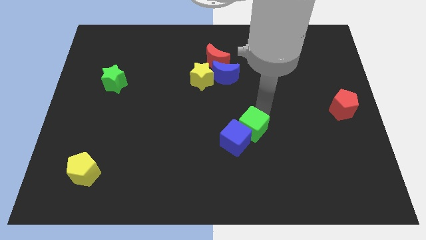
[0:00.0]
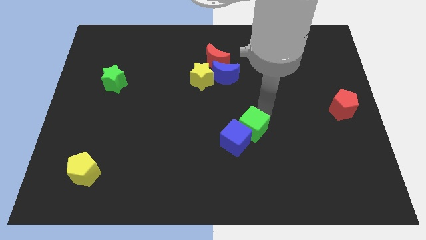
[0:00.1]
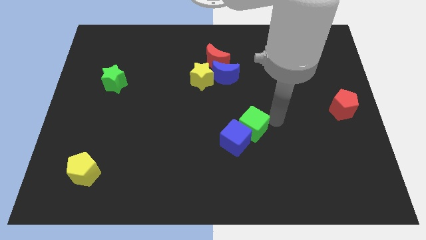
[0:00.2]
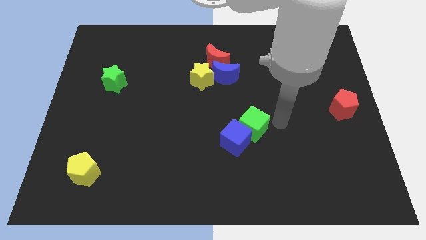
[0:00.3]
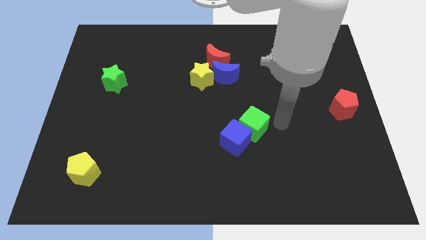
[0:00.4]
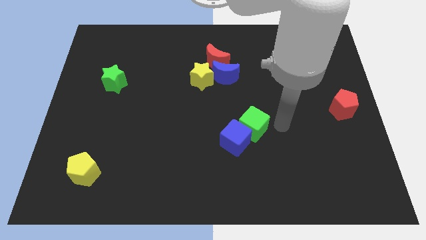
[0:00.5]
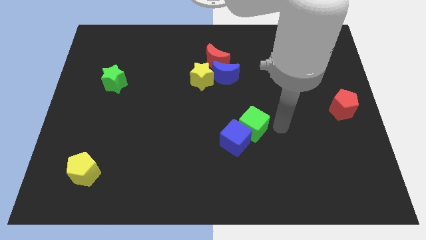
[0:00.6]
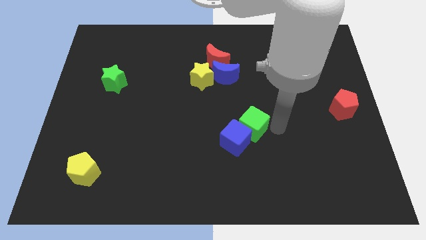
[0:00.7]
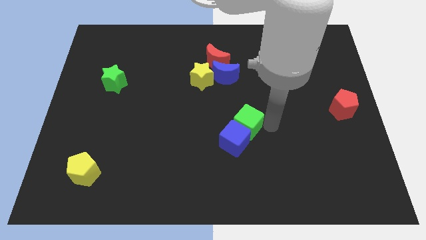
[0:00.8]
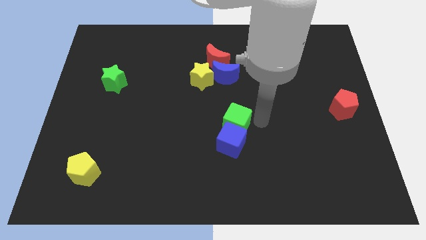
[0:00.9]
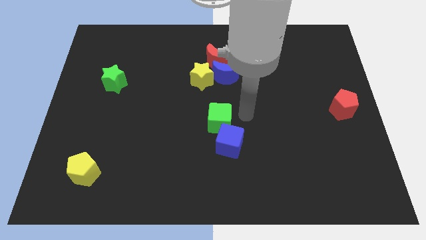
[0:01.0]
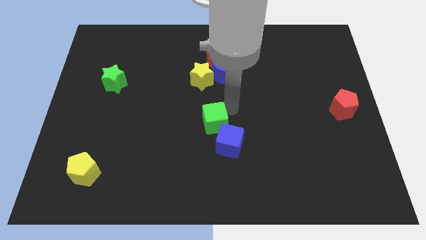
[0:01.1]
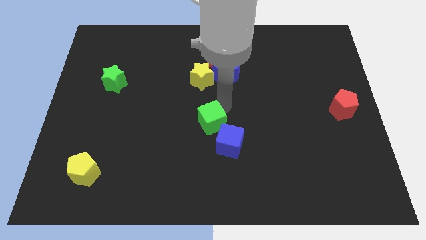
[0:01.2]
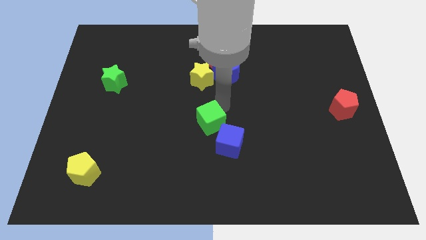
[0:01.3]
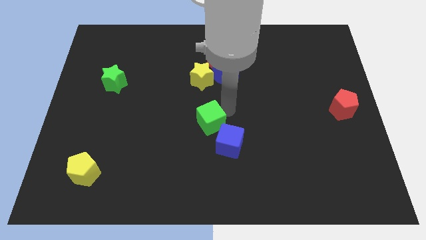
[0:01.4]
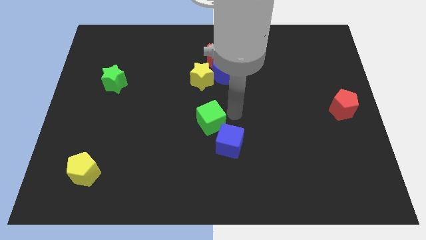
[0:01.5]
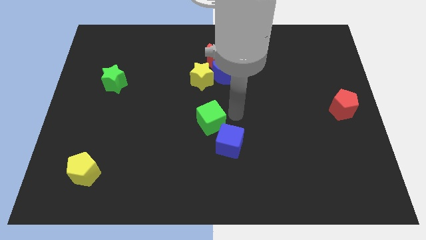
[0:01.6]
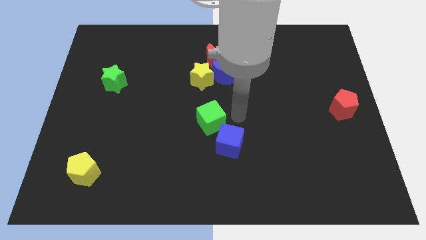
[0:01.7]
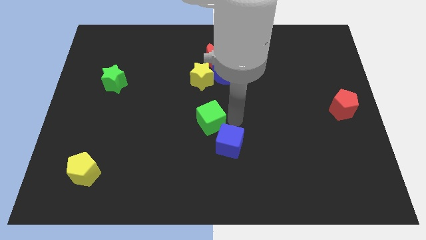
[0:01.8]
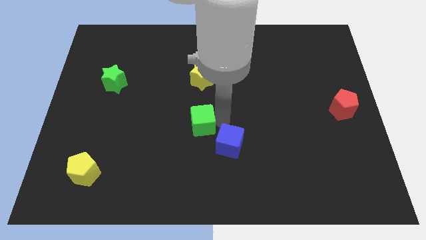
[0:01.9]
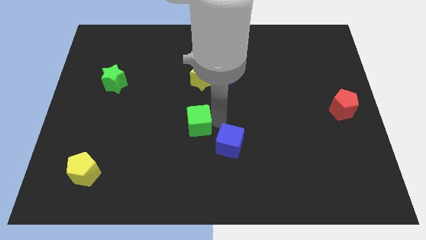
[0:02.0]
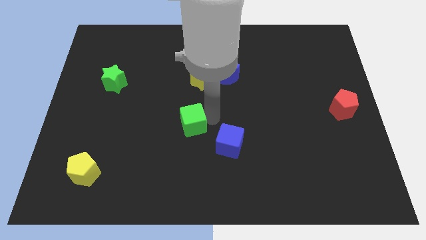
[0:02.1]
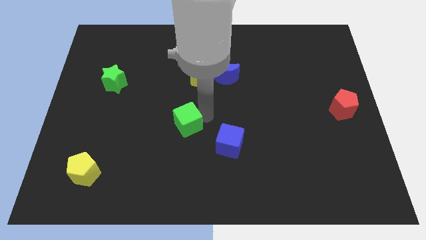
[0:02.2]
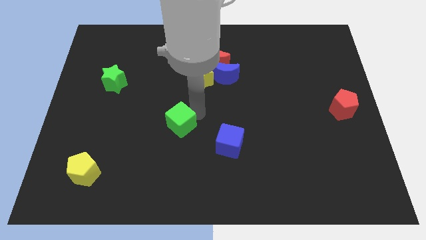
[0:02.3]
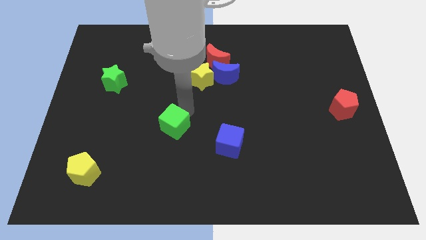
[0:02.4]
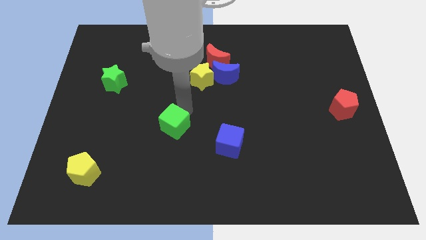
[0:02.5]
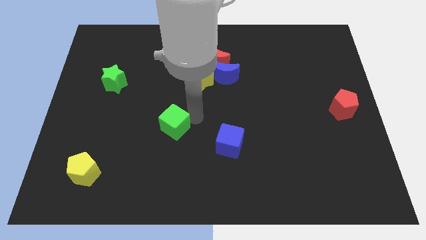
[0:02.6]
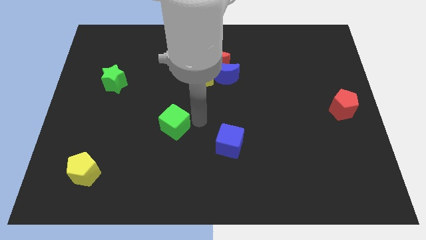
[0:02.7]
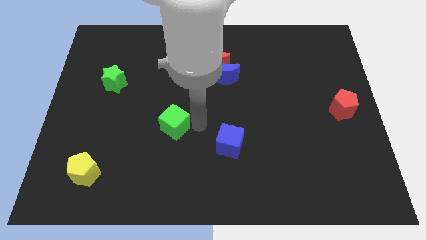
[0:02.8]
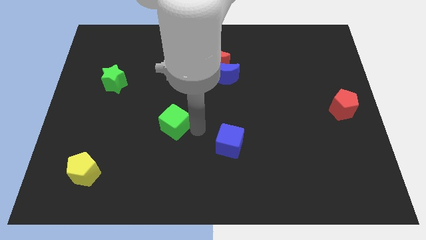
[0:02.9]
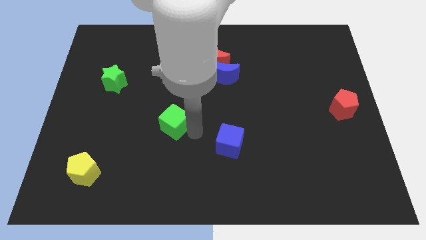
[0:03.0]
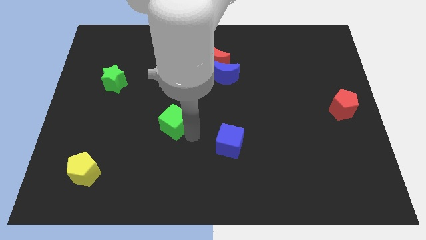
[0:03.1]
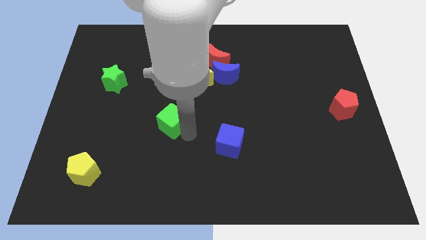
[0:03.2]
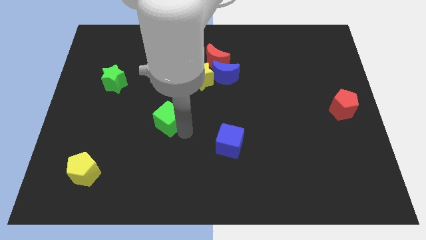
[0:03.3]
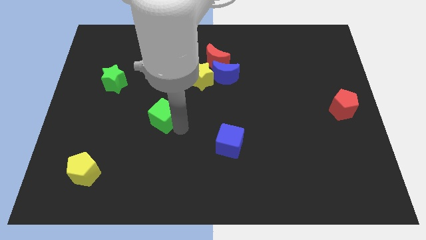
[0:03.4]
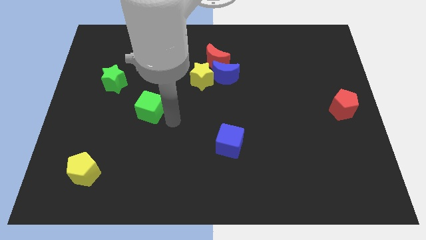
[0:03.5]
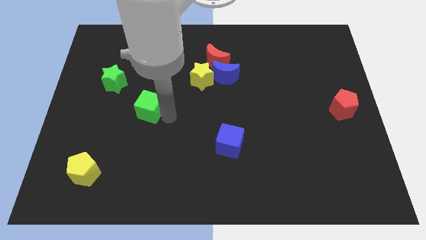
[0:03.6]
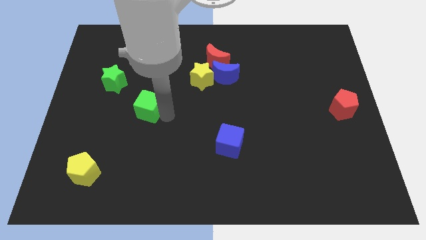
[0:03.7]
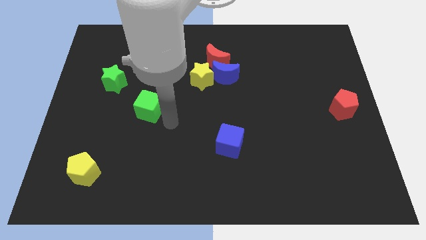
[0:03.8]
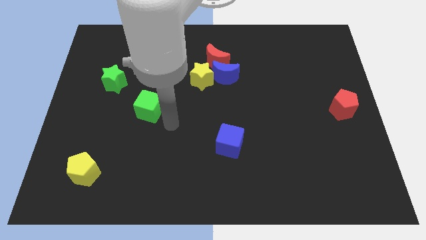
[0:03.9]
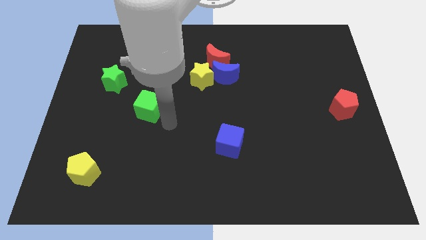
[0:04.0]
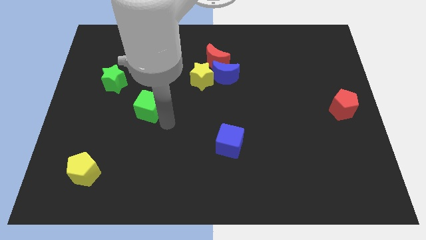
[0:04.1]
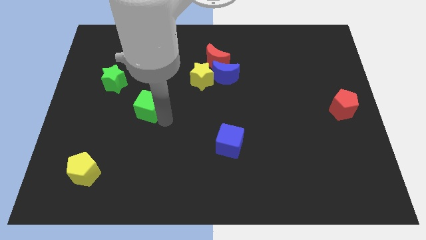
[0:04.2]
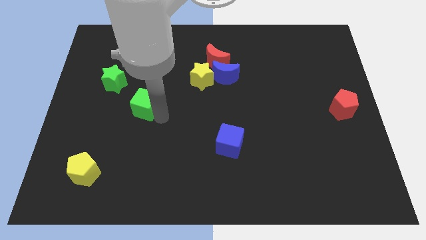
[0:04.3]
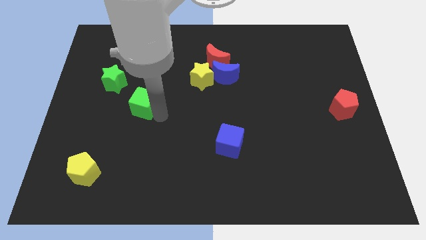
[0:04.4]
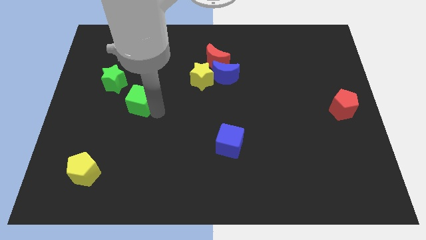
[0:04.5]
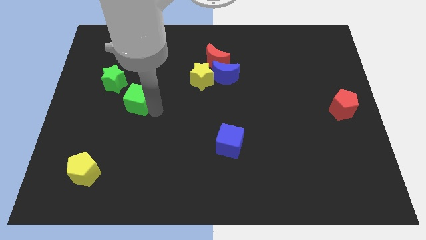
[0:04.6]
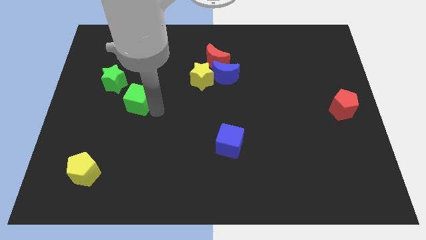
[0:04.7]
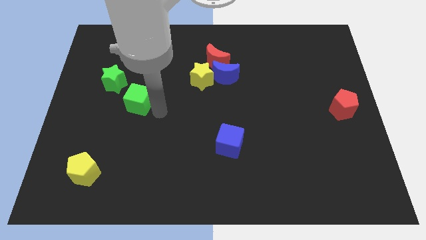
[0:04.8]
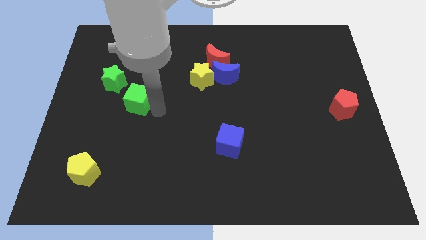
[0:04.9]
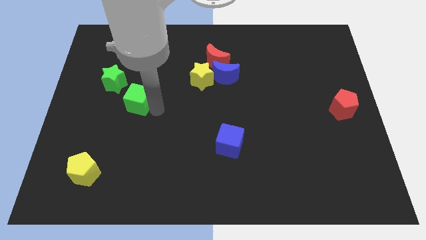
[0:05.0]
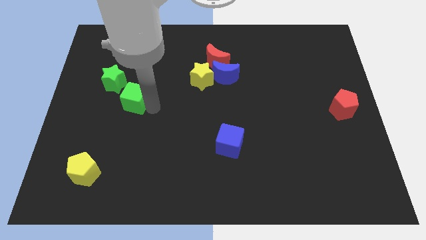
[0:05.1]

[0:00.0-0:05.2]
slide the green cube diagonally bottom right to the green star

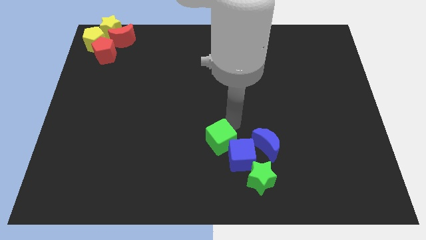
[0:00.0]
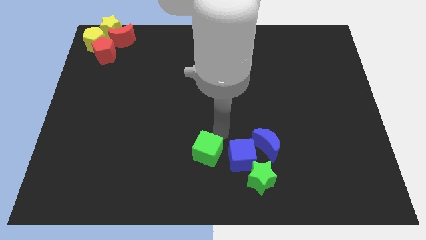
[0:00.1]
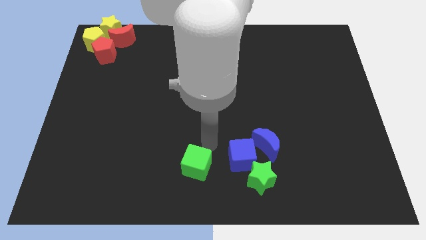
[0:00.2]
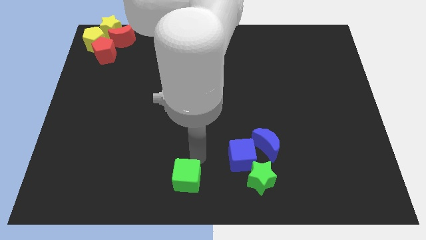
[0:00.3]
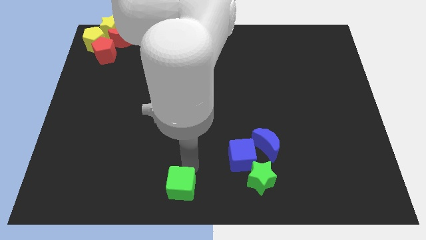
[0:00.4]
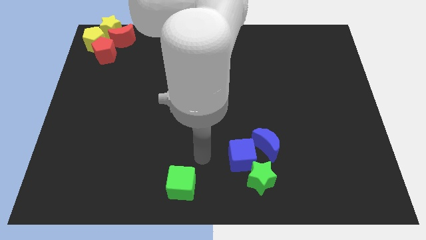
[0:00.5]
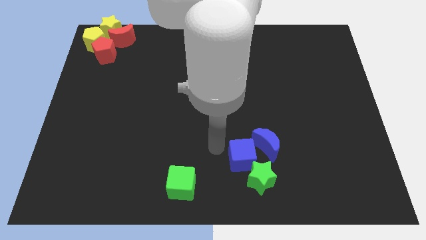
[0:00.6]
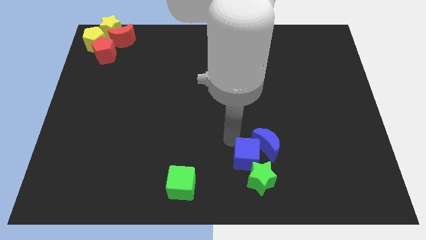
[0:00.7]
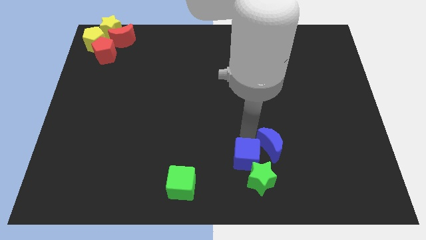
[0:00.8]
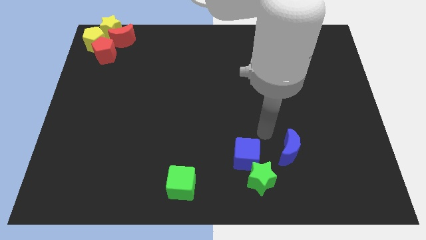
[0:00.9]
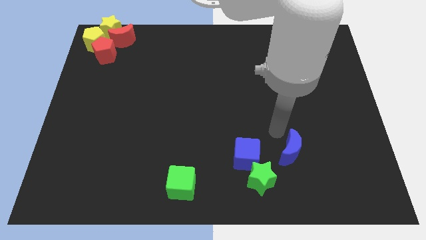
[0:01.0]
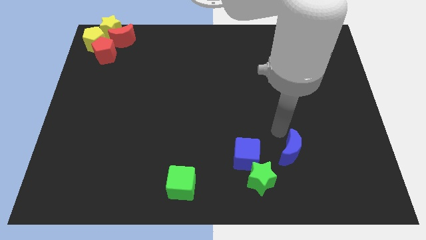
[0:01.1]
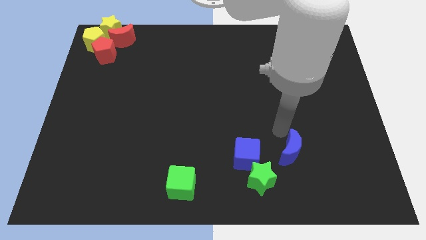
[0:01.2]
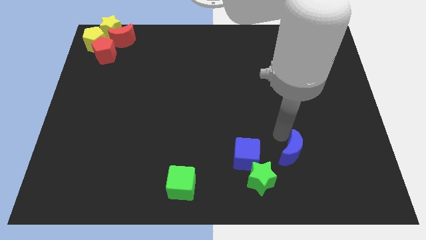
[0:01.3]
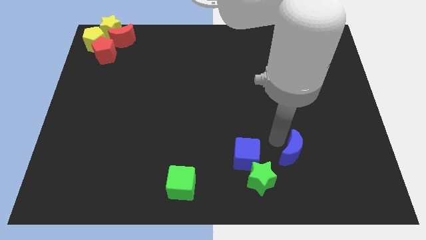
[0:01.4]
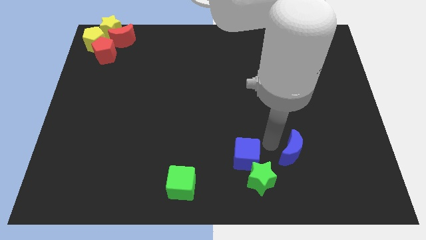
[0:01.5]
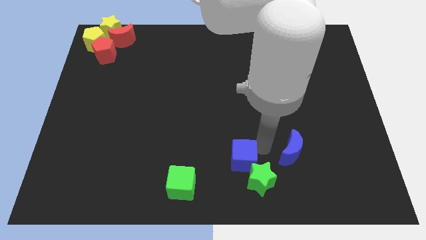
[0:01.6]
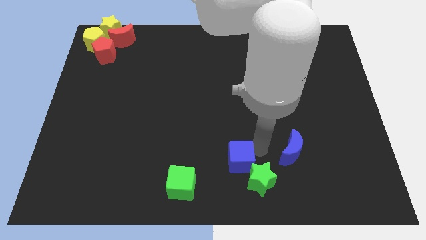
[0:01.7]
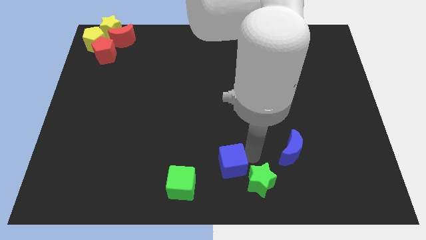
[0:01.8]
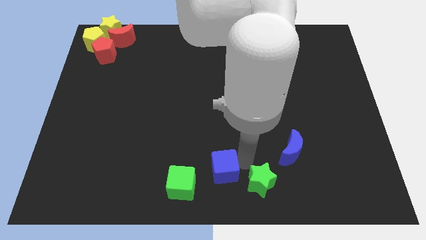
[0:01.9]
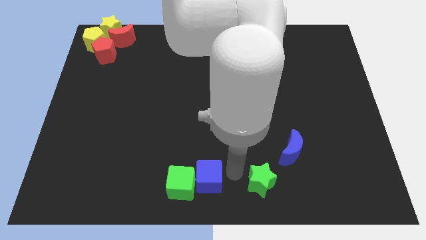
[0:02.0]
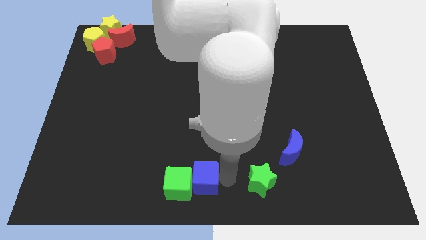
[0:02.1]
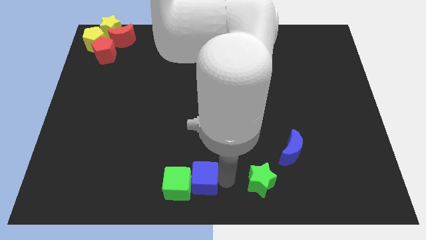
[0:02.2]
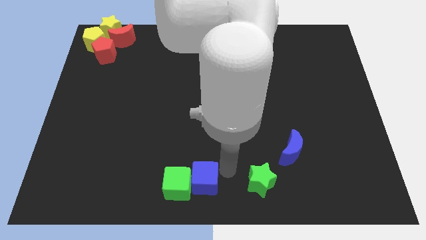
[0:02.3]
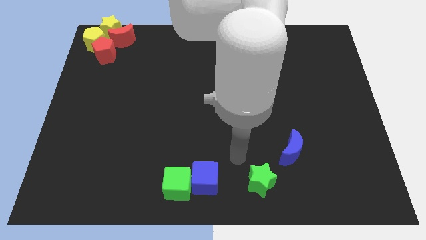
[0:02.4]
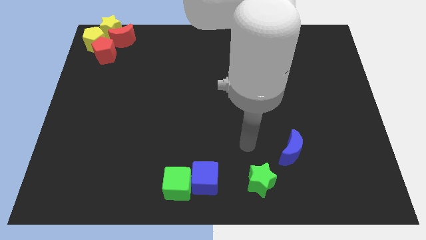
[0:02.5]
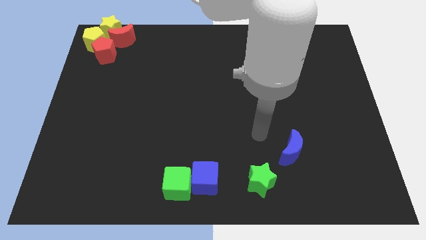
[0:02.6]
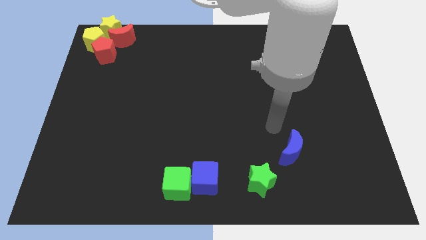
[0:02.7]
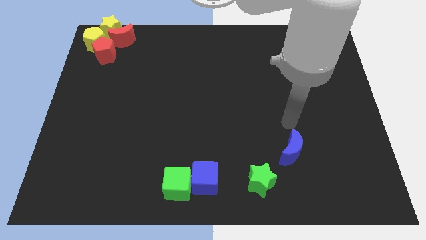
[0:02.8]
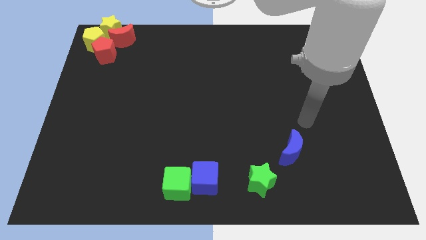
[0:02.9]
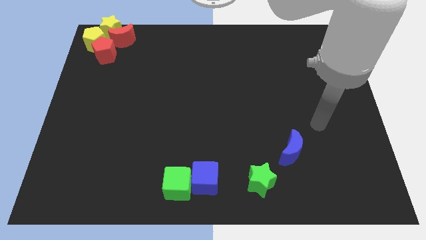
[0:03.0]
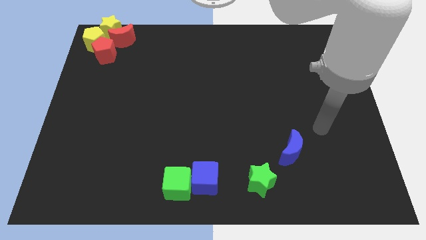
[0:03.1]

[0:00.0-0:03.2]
push the green cube and blue cube to the bottom left side of the board

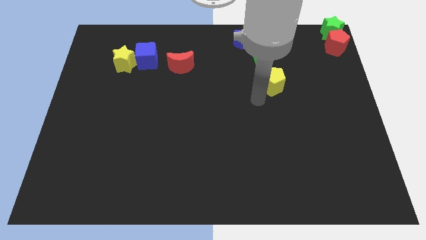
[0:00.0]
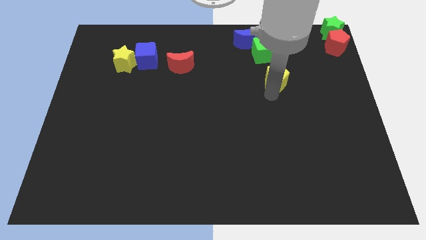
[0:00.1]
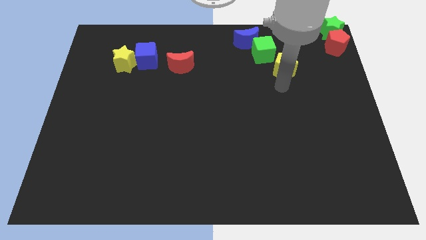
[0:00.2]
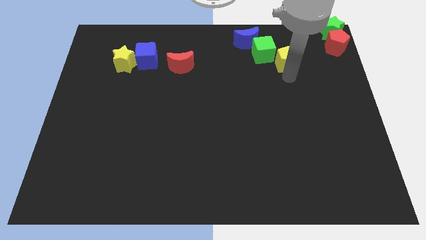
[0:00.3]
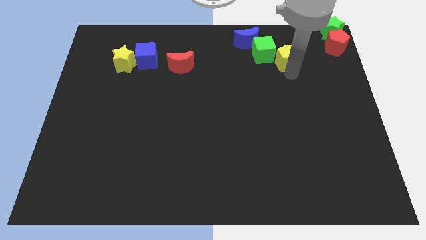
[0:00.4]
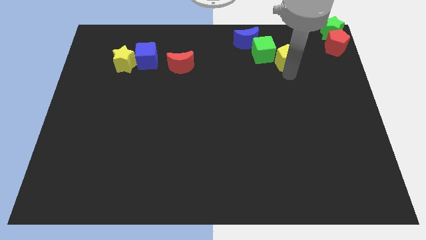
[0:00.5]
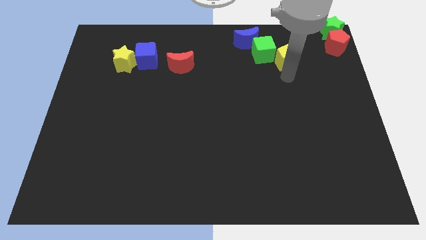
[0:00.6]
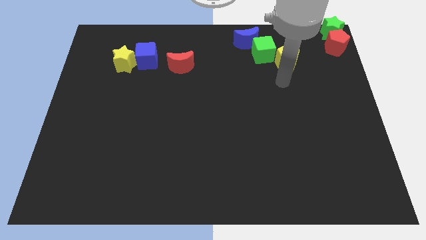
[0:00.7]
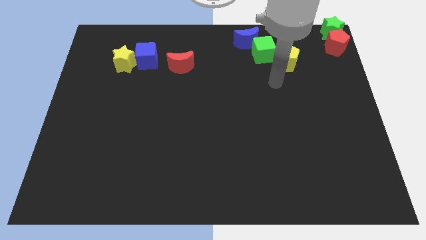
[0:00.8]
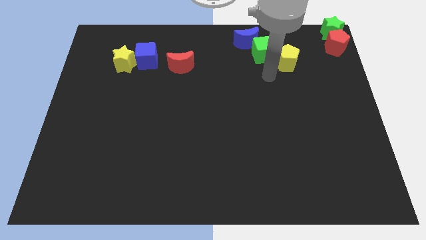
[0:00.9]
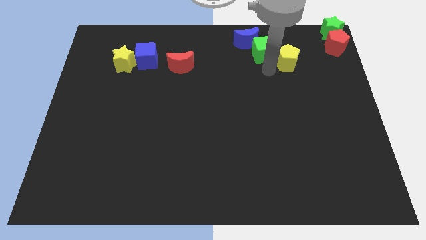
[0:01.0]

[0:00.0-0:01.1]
push the yellow pentagon to the right of the green cube
